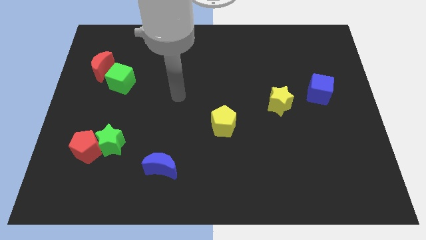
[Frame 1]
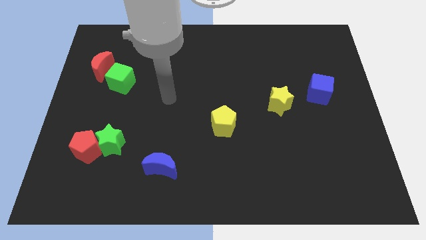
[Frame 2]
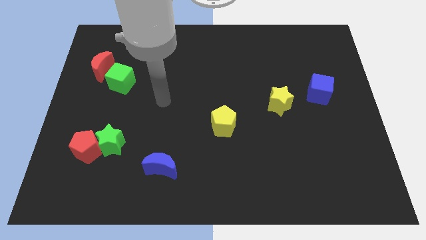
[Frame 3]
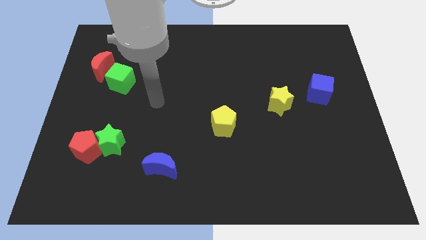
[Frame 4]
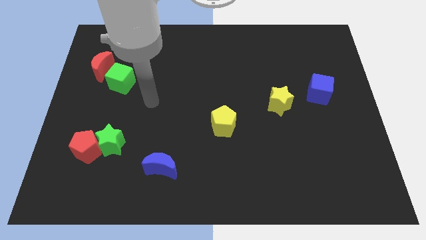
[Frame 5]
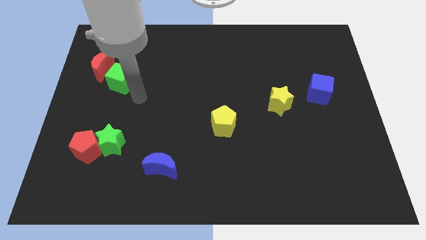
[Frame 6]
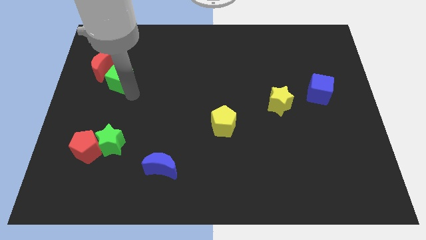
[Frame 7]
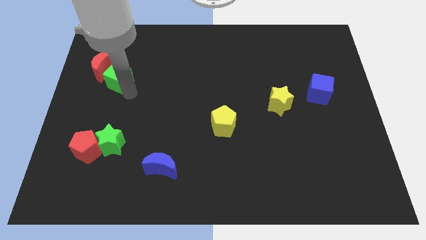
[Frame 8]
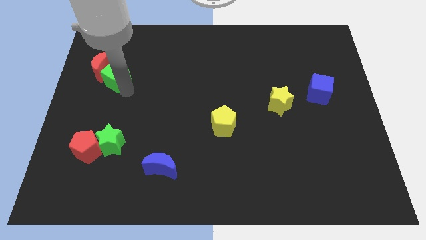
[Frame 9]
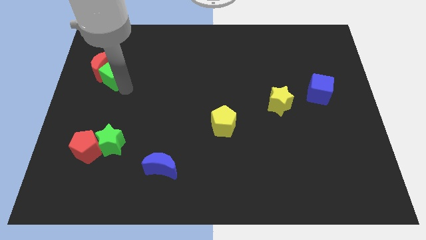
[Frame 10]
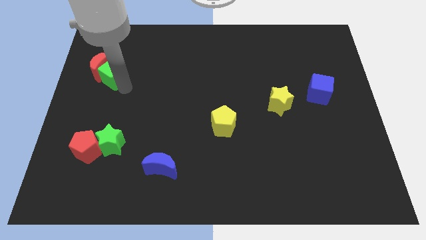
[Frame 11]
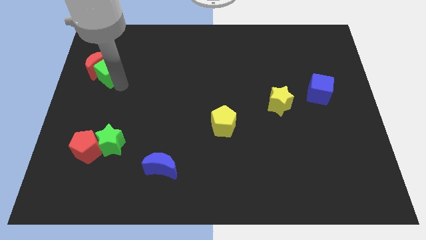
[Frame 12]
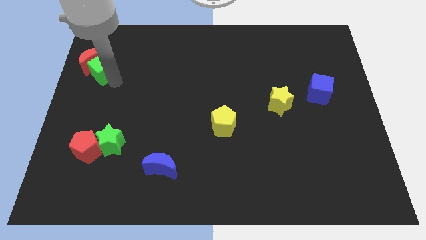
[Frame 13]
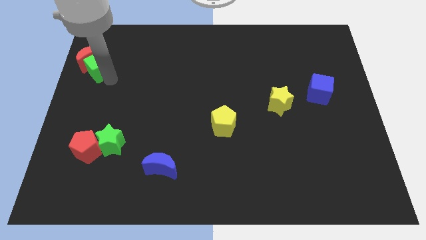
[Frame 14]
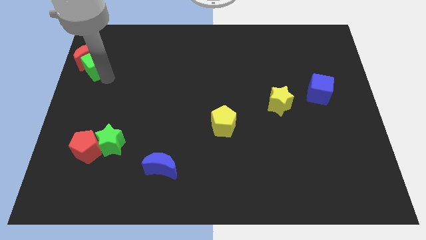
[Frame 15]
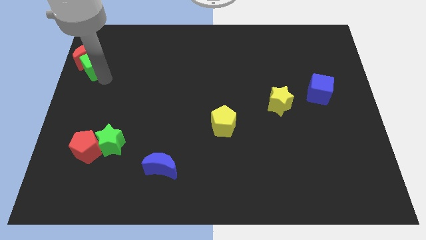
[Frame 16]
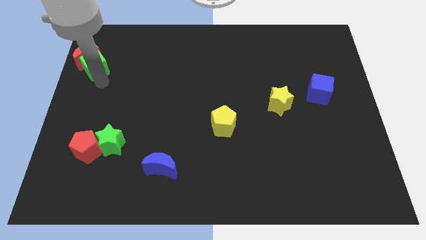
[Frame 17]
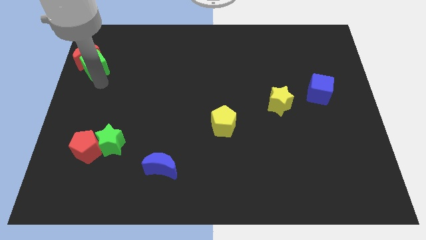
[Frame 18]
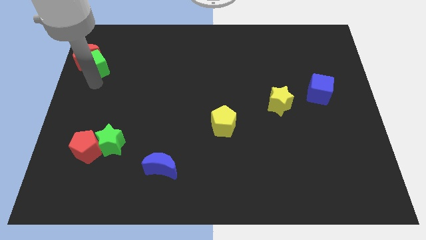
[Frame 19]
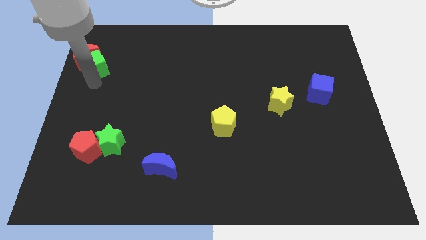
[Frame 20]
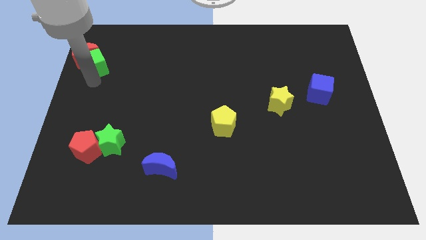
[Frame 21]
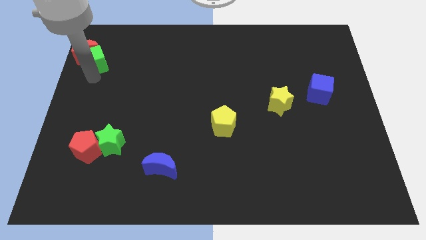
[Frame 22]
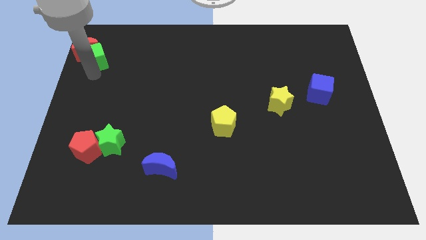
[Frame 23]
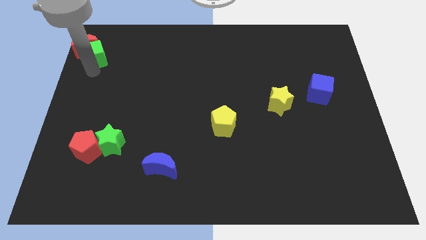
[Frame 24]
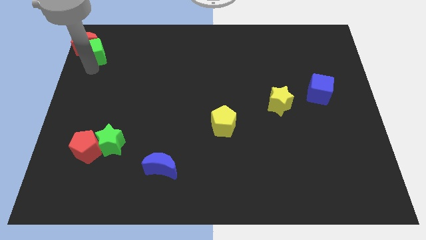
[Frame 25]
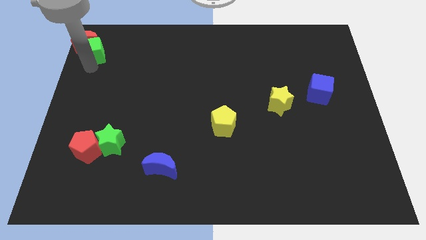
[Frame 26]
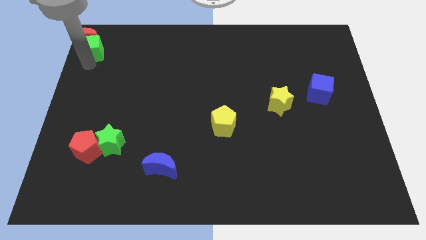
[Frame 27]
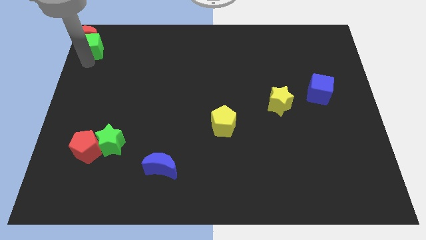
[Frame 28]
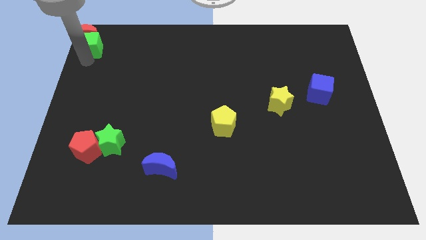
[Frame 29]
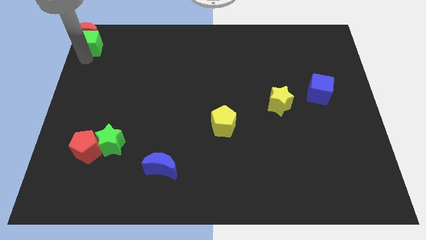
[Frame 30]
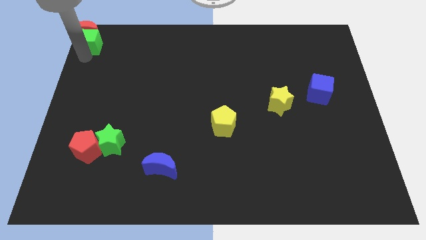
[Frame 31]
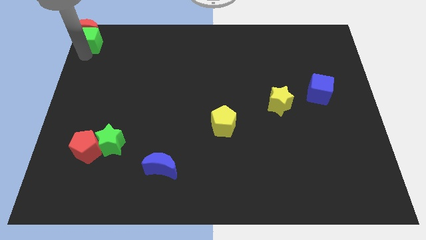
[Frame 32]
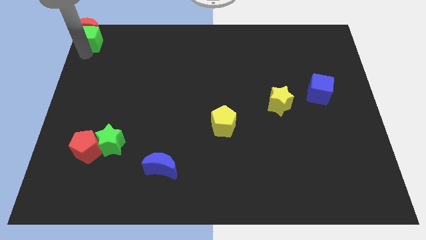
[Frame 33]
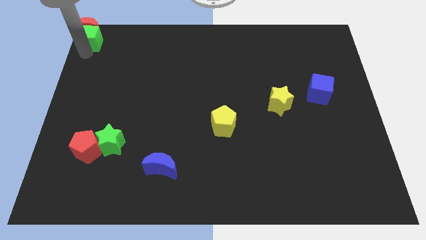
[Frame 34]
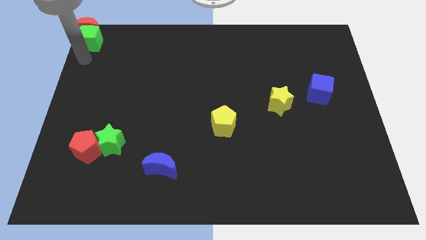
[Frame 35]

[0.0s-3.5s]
place the green cube and red moon at the top left corner of the board

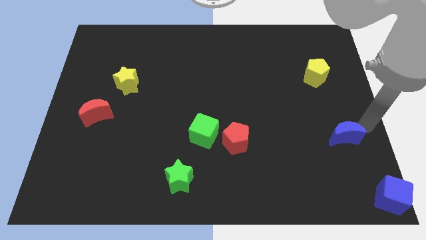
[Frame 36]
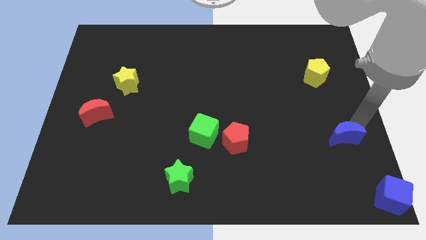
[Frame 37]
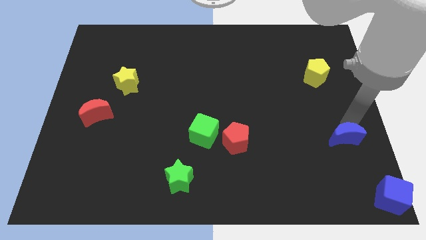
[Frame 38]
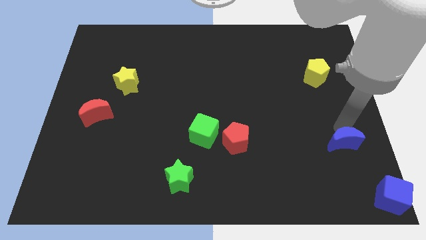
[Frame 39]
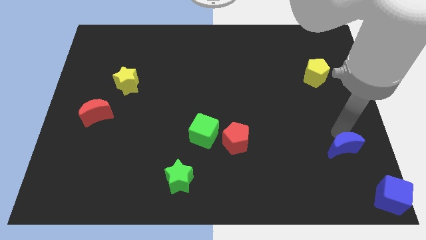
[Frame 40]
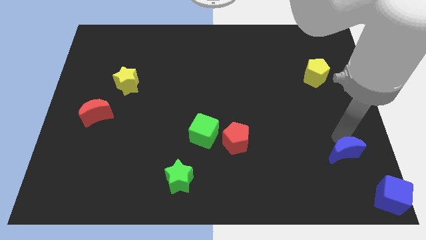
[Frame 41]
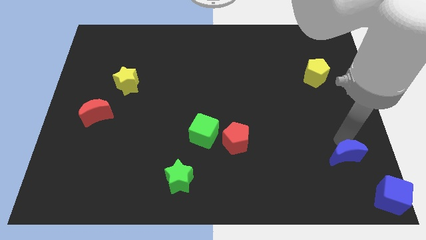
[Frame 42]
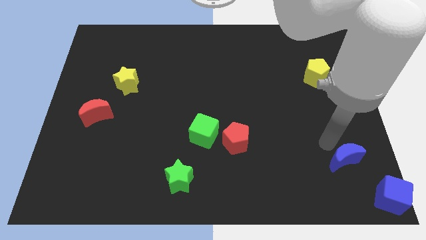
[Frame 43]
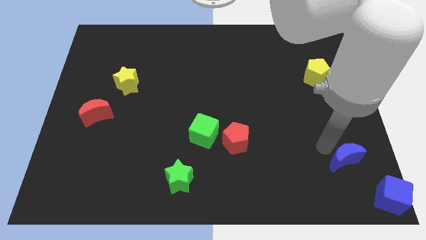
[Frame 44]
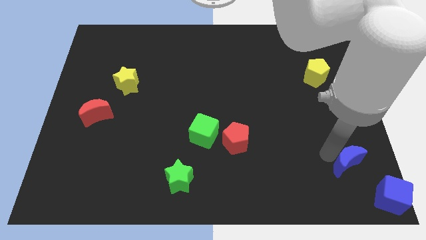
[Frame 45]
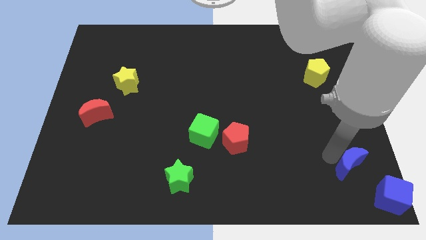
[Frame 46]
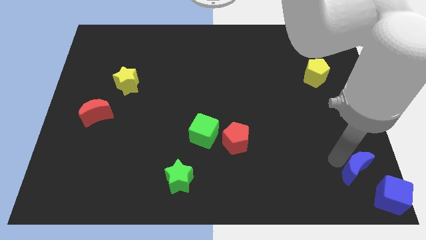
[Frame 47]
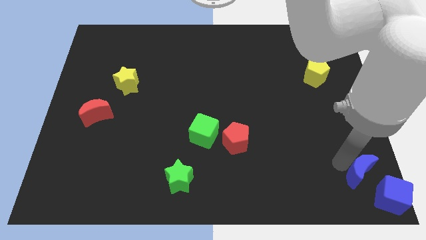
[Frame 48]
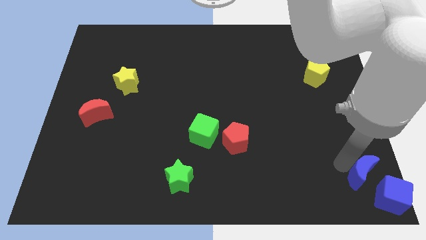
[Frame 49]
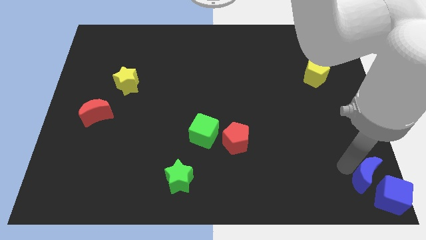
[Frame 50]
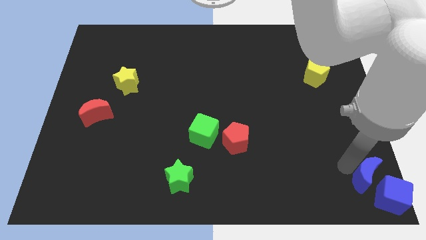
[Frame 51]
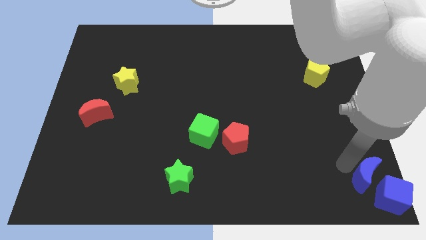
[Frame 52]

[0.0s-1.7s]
place blue moon to the left side of the blue cube

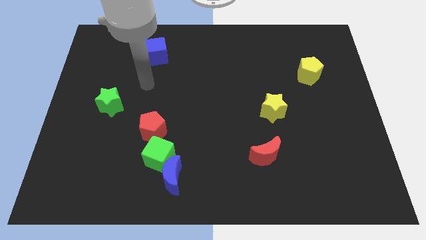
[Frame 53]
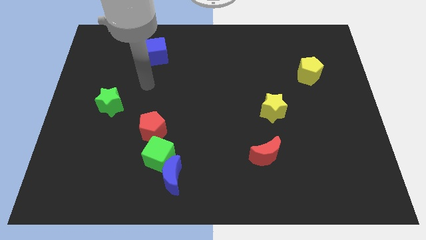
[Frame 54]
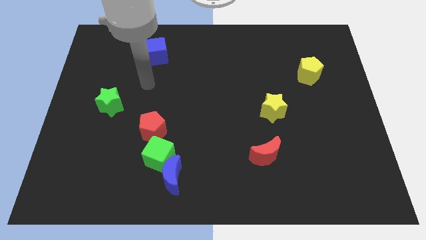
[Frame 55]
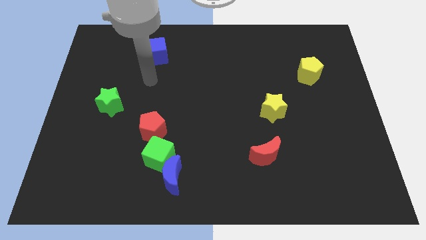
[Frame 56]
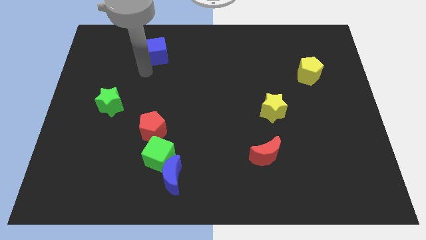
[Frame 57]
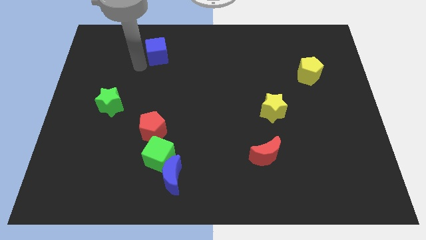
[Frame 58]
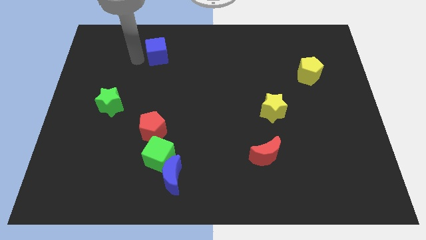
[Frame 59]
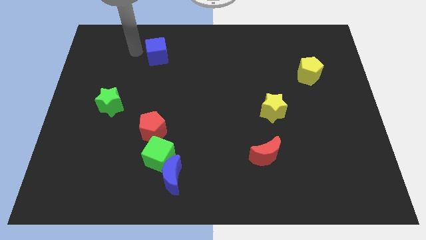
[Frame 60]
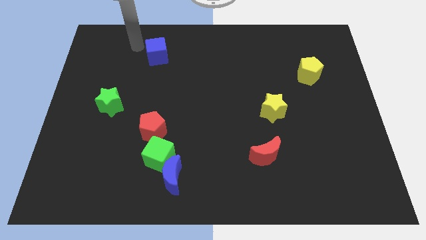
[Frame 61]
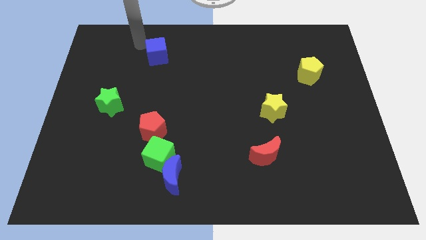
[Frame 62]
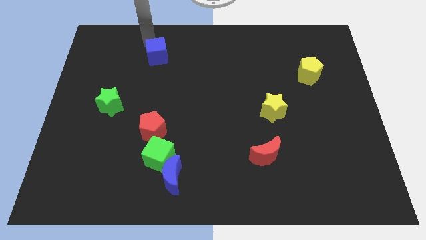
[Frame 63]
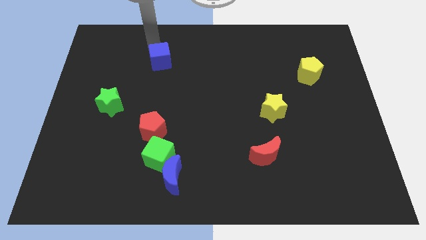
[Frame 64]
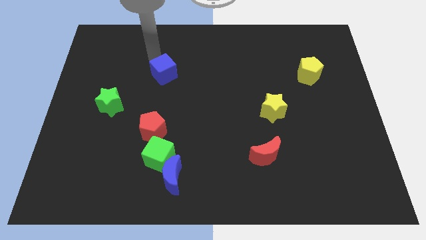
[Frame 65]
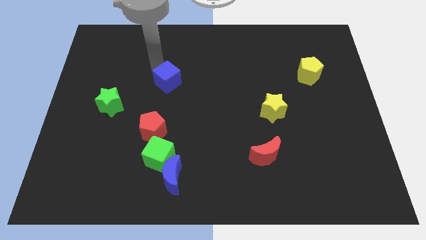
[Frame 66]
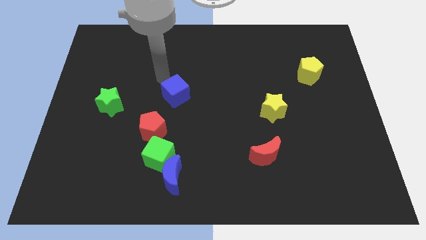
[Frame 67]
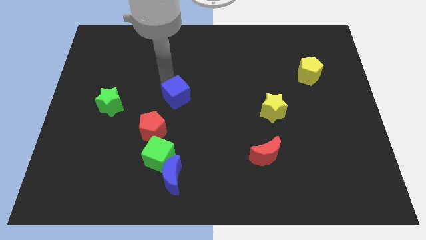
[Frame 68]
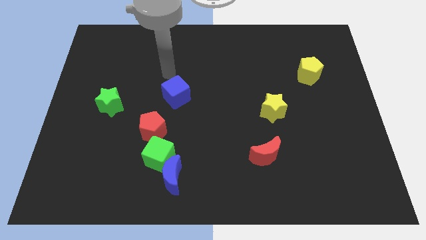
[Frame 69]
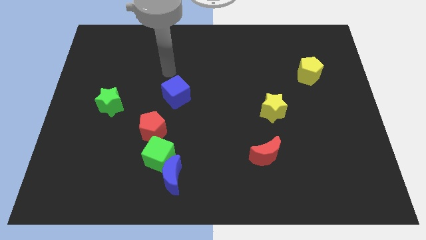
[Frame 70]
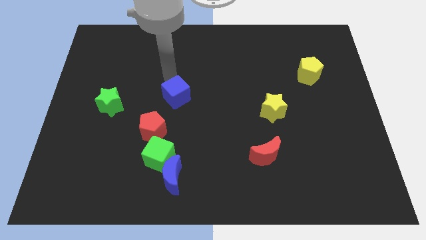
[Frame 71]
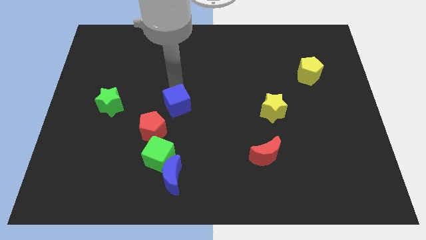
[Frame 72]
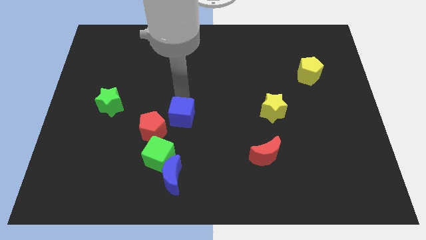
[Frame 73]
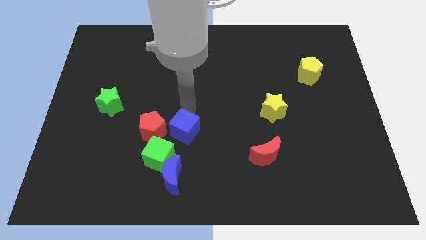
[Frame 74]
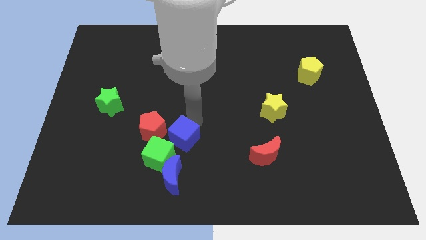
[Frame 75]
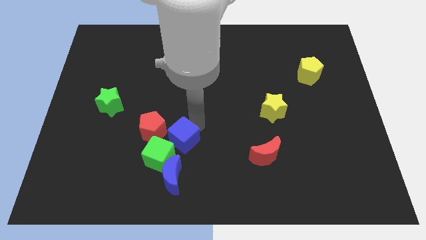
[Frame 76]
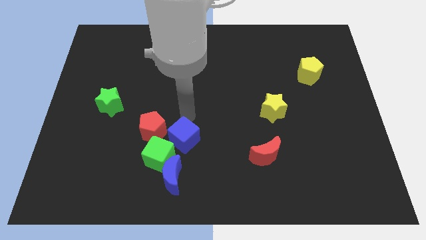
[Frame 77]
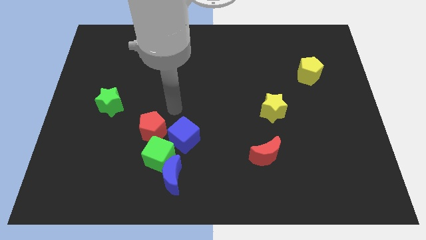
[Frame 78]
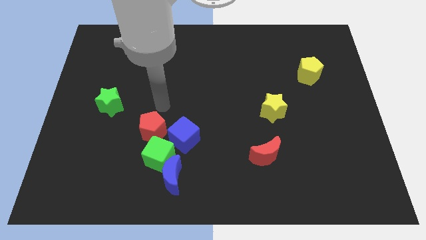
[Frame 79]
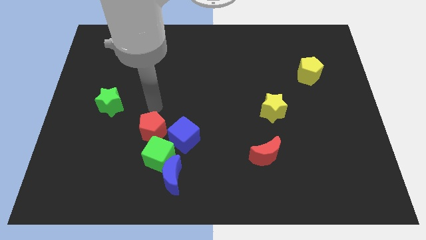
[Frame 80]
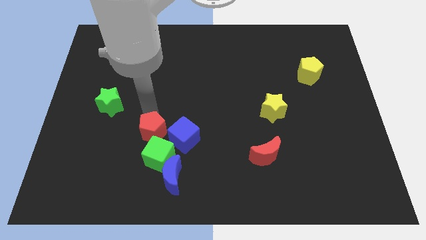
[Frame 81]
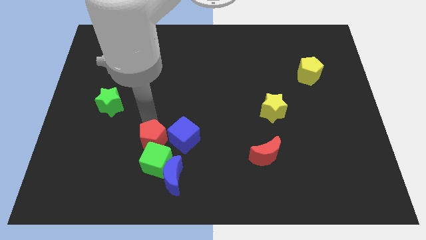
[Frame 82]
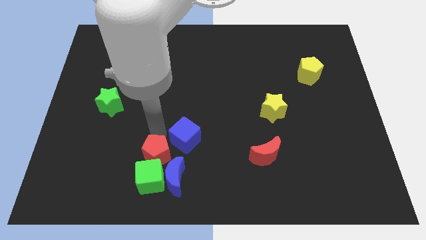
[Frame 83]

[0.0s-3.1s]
move the blue cube above the blue moon
